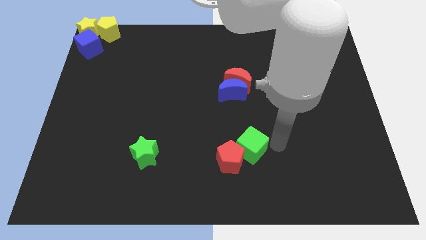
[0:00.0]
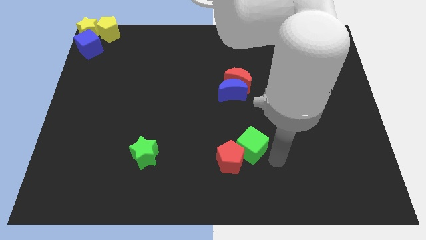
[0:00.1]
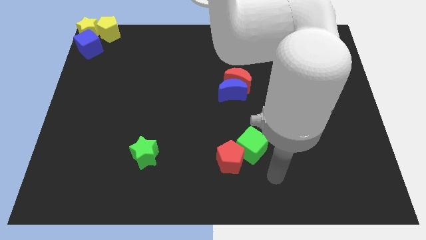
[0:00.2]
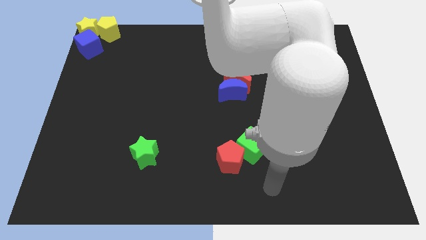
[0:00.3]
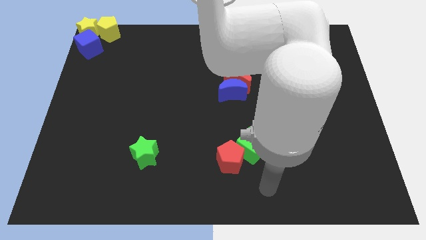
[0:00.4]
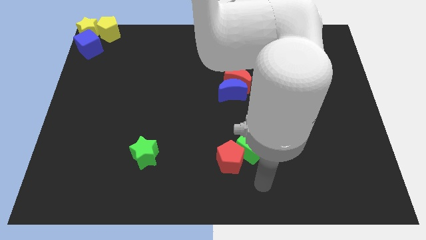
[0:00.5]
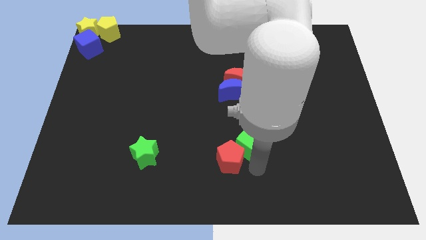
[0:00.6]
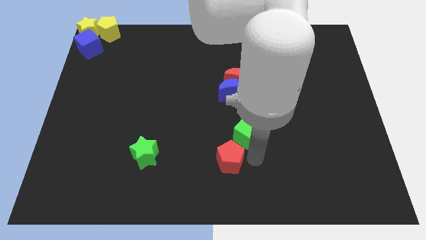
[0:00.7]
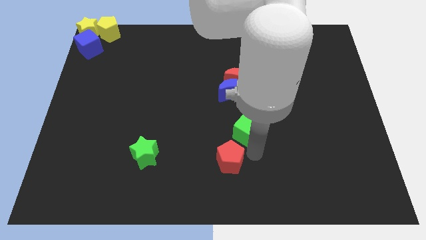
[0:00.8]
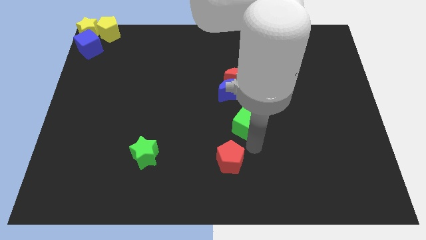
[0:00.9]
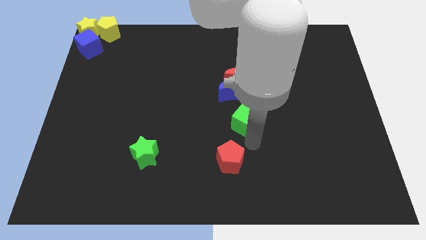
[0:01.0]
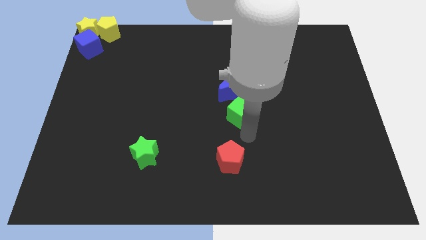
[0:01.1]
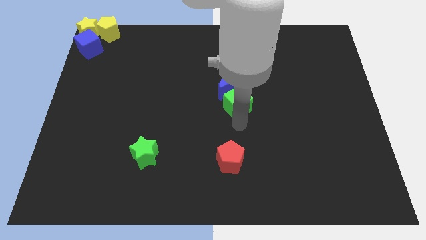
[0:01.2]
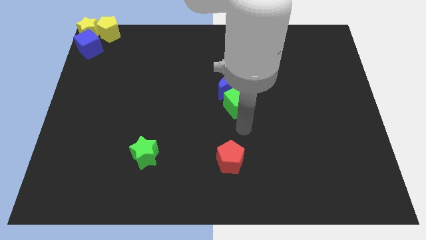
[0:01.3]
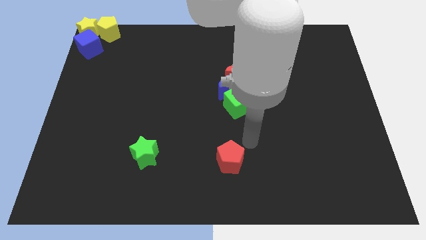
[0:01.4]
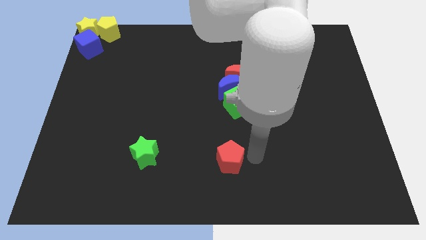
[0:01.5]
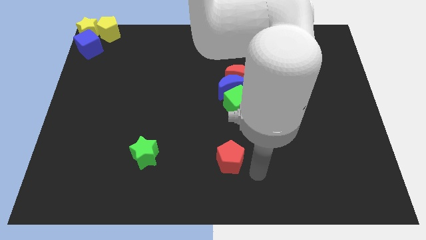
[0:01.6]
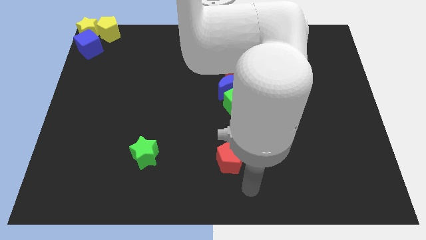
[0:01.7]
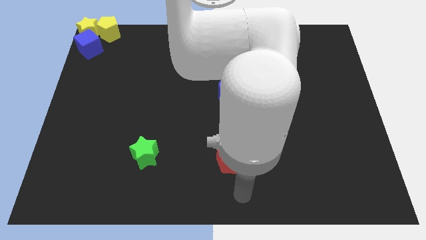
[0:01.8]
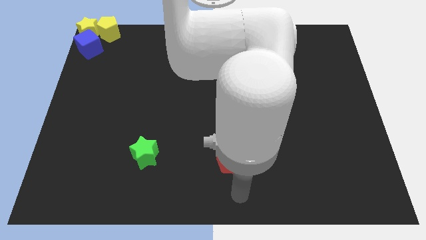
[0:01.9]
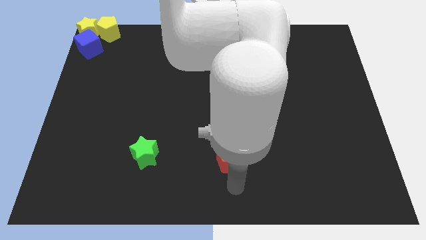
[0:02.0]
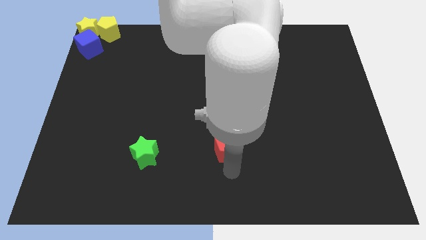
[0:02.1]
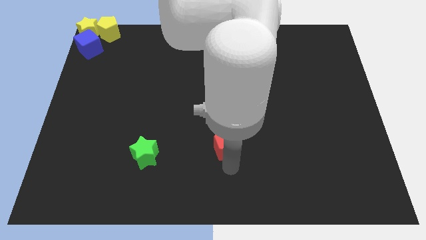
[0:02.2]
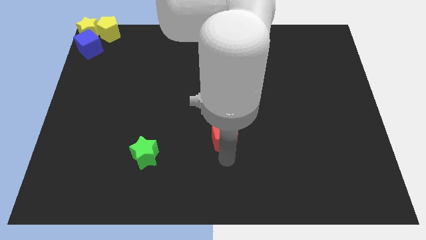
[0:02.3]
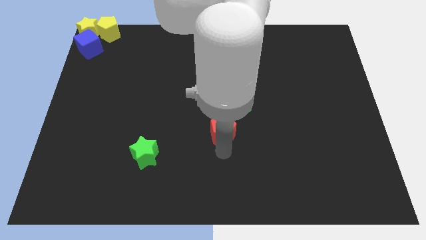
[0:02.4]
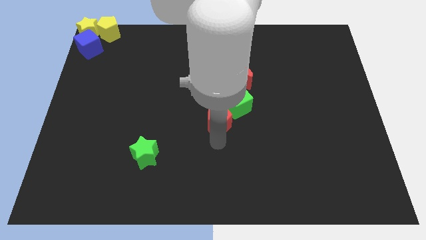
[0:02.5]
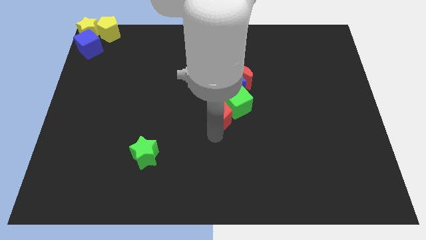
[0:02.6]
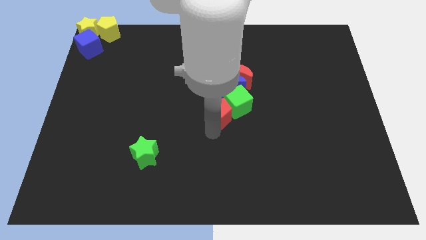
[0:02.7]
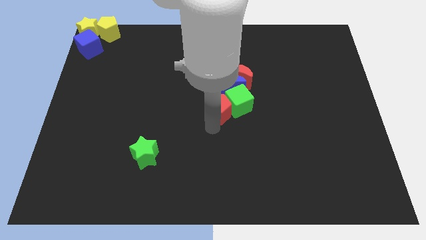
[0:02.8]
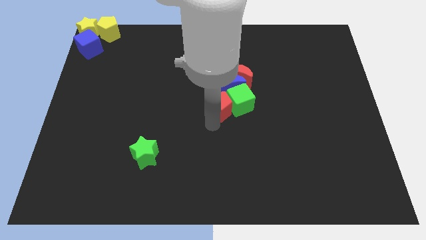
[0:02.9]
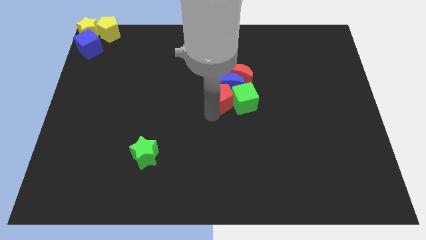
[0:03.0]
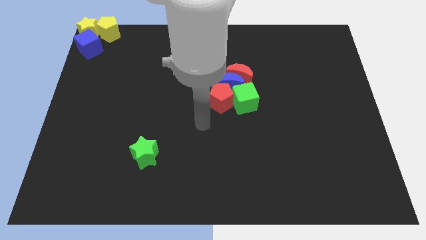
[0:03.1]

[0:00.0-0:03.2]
place the red pentagon left to the green cube

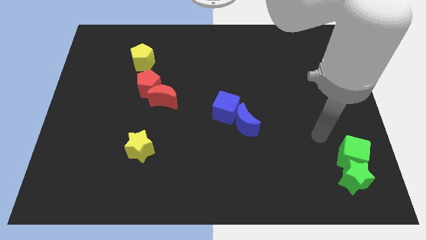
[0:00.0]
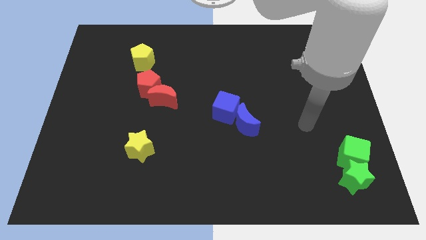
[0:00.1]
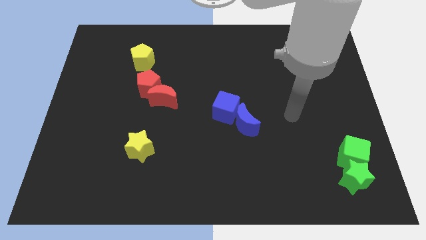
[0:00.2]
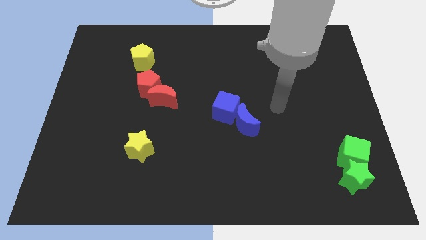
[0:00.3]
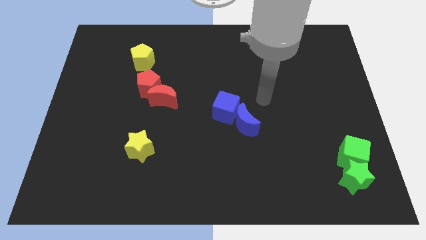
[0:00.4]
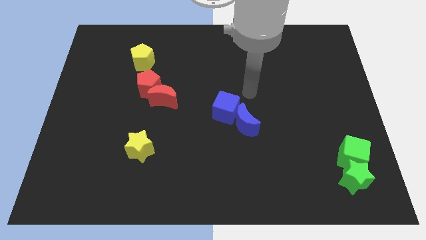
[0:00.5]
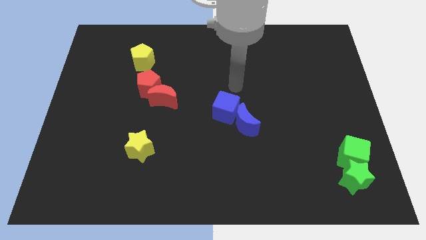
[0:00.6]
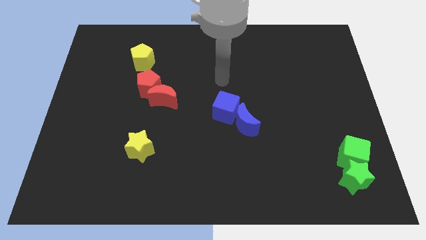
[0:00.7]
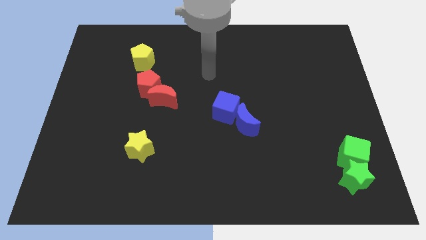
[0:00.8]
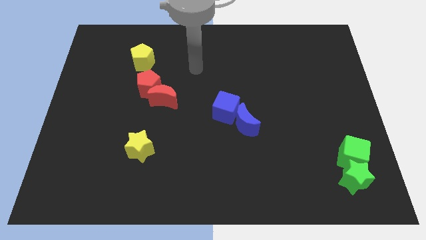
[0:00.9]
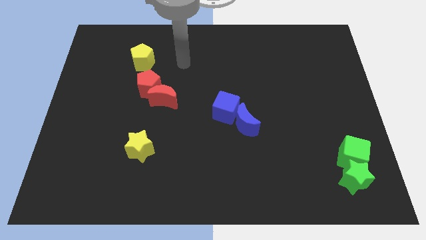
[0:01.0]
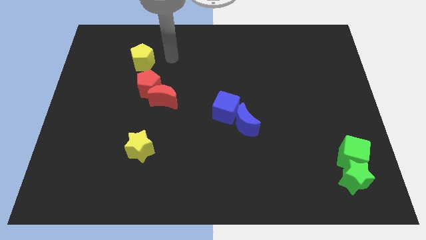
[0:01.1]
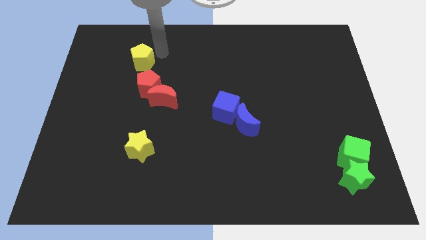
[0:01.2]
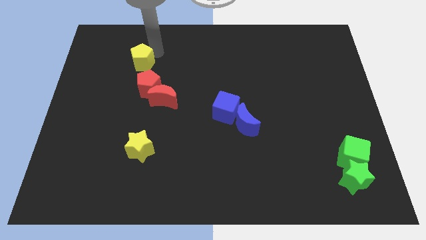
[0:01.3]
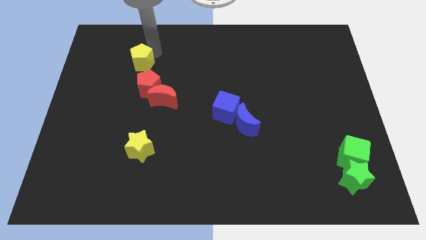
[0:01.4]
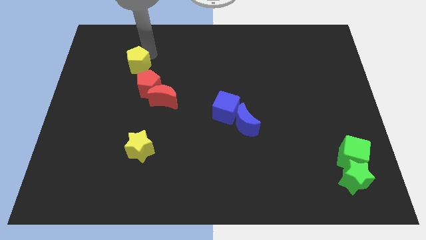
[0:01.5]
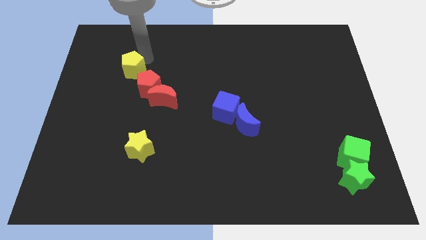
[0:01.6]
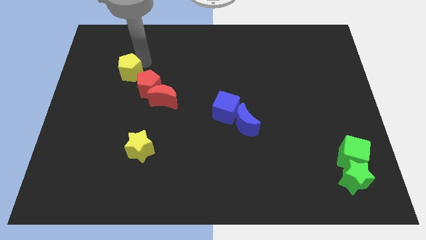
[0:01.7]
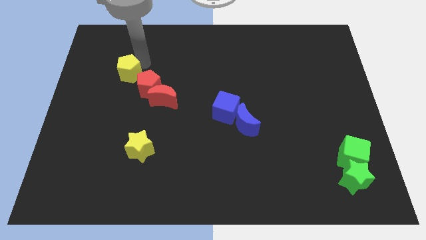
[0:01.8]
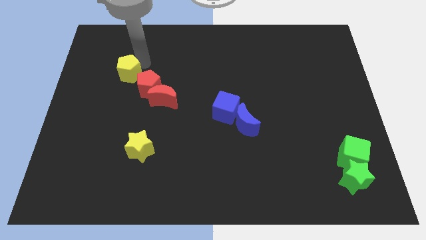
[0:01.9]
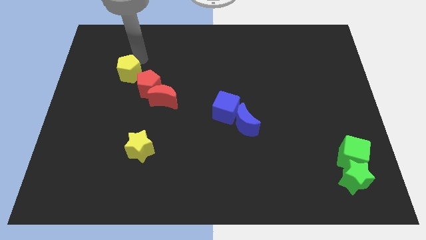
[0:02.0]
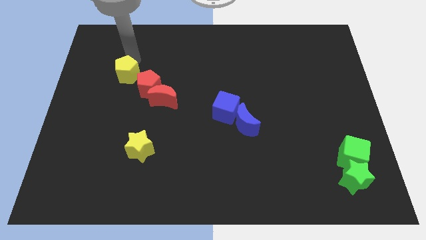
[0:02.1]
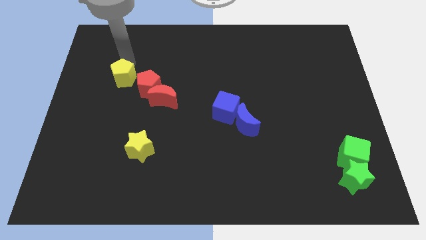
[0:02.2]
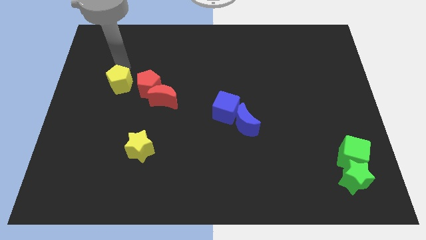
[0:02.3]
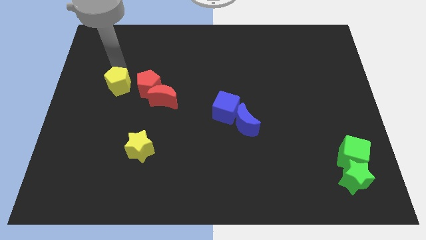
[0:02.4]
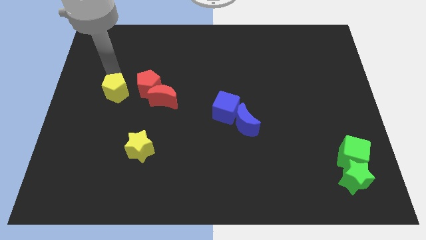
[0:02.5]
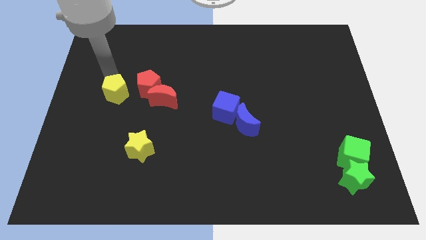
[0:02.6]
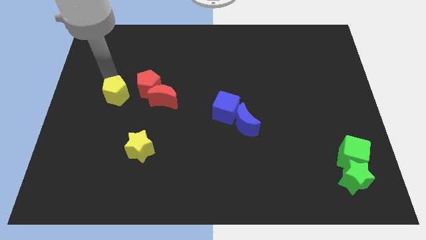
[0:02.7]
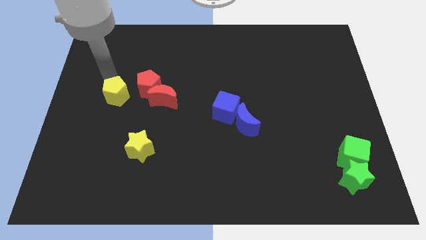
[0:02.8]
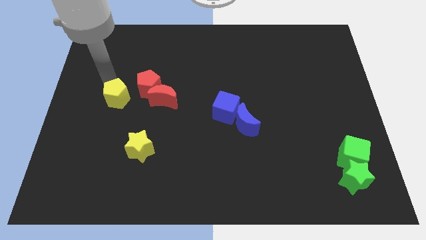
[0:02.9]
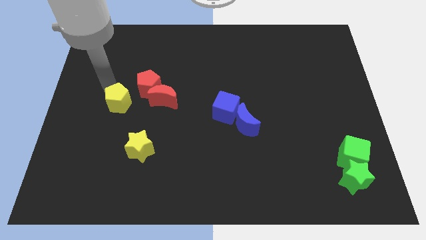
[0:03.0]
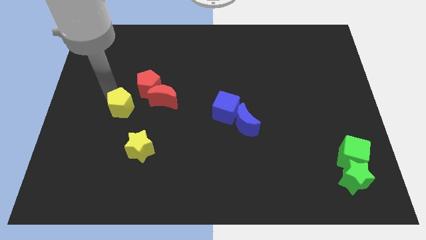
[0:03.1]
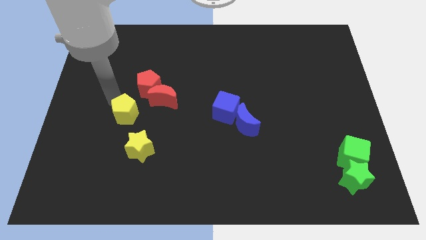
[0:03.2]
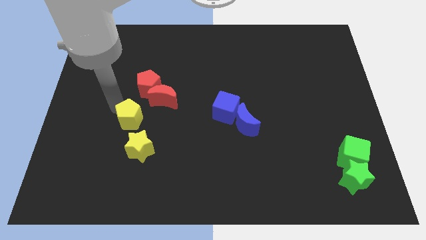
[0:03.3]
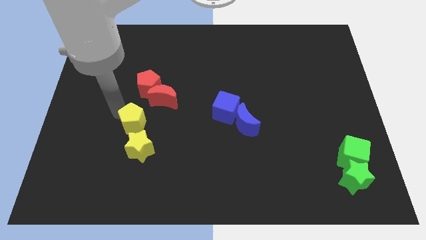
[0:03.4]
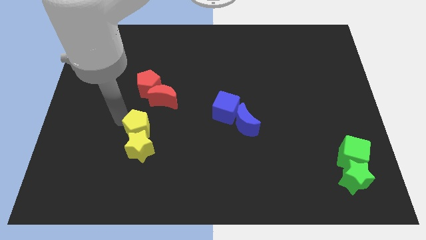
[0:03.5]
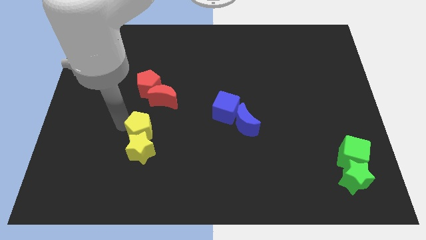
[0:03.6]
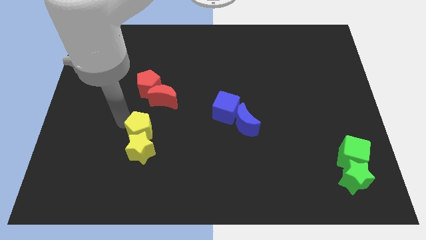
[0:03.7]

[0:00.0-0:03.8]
push the yellow pentagon into the yellow star

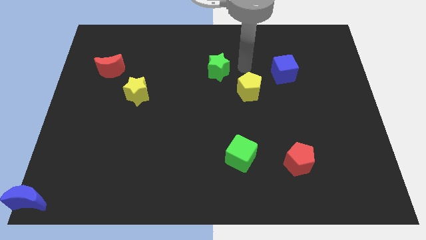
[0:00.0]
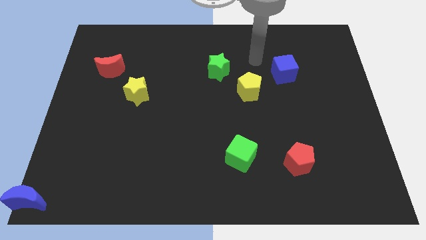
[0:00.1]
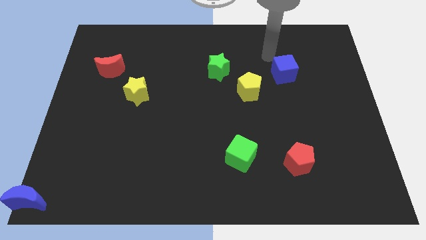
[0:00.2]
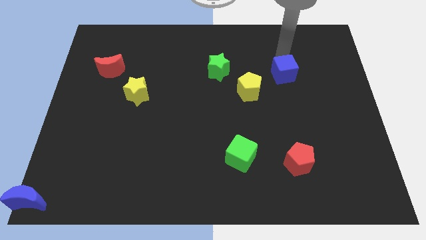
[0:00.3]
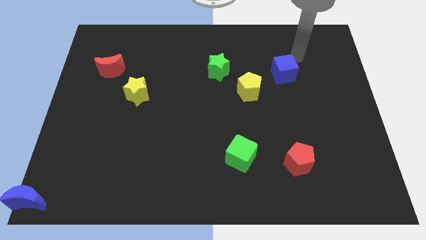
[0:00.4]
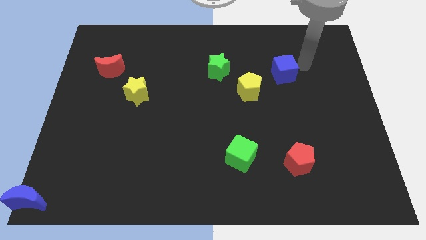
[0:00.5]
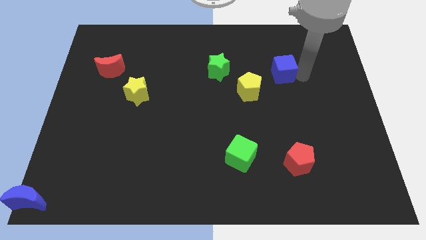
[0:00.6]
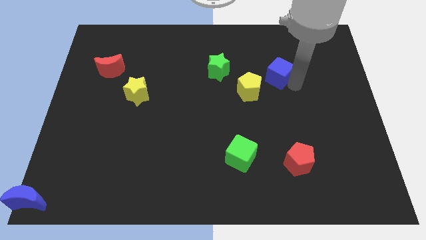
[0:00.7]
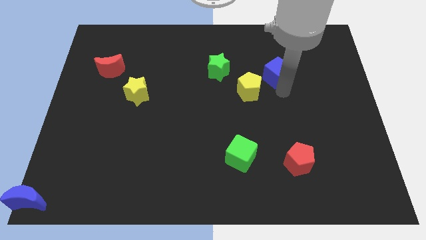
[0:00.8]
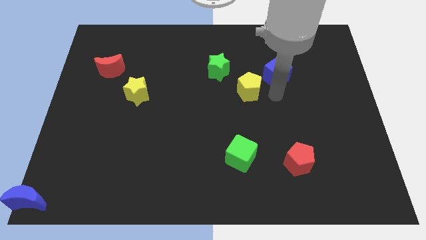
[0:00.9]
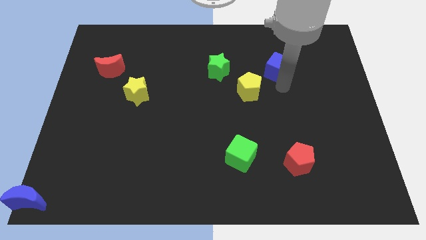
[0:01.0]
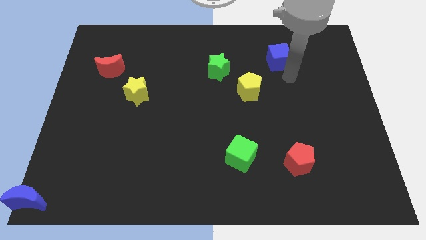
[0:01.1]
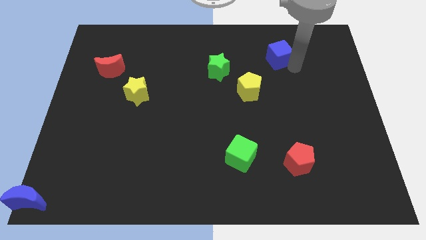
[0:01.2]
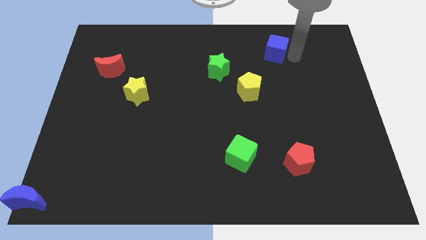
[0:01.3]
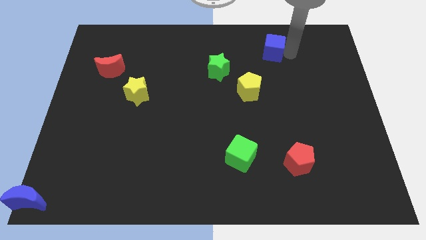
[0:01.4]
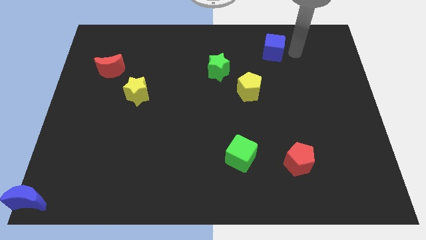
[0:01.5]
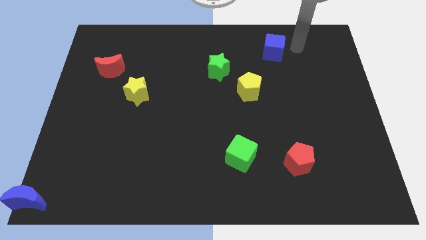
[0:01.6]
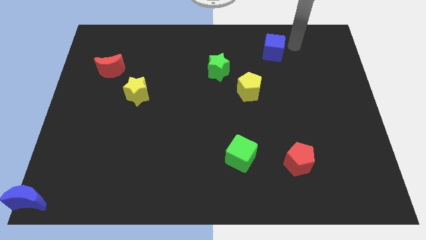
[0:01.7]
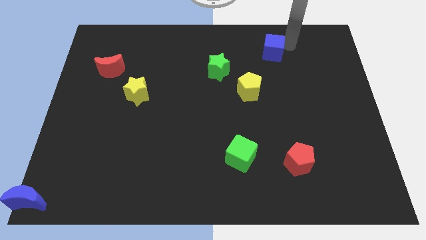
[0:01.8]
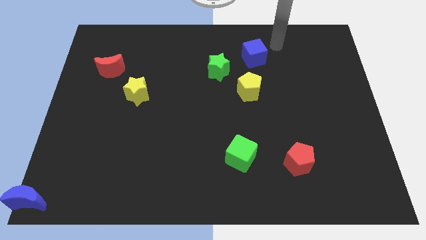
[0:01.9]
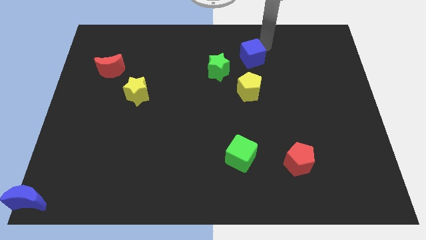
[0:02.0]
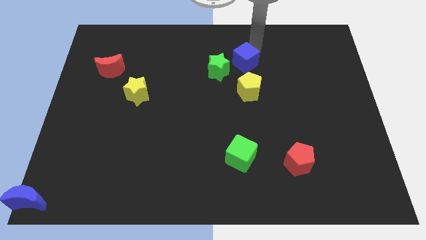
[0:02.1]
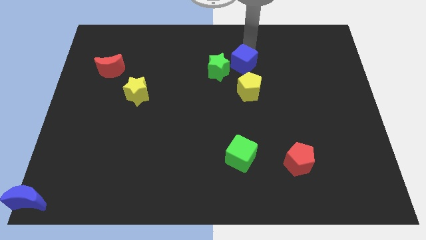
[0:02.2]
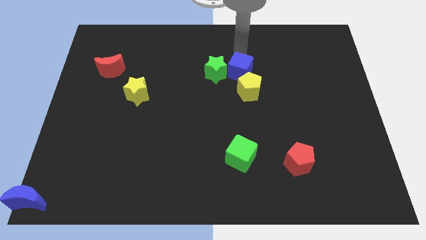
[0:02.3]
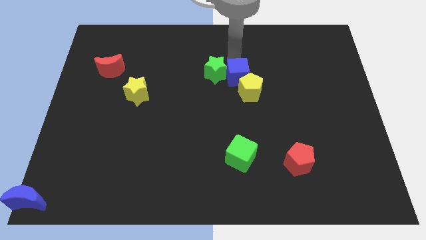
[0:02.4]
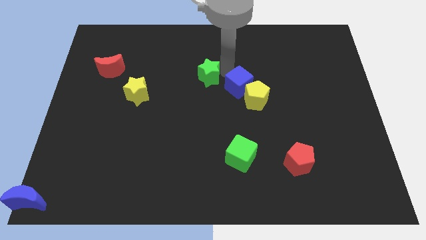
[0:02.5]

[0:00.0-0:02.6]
push the blue cube to the right of the green star
